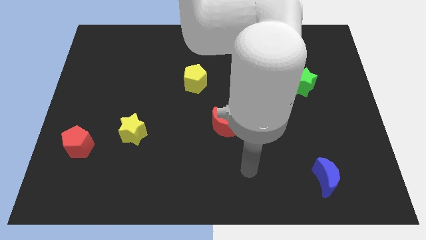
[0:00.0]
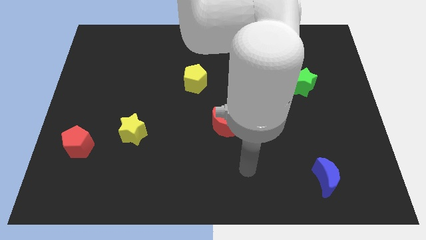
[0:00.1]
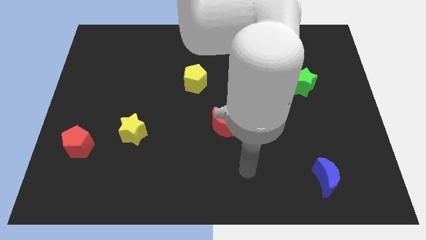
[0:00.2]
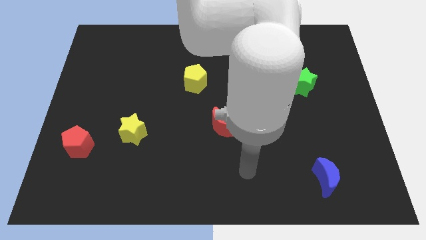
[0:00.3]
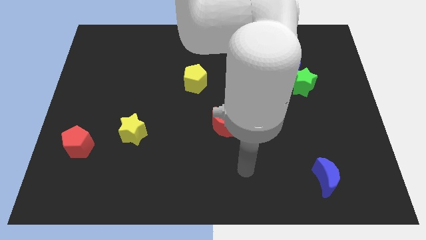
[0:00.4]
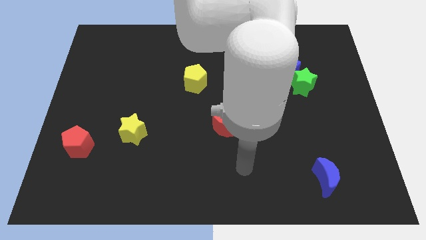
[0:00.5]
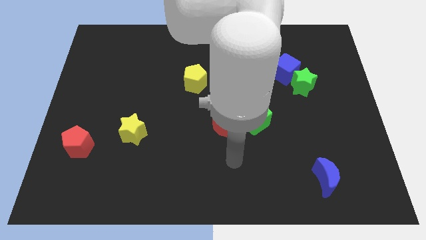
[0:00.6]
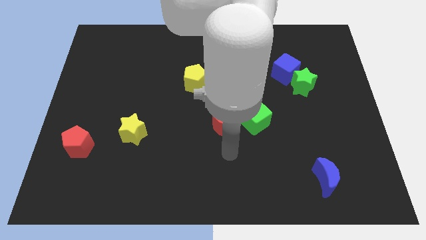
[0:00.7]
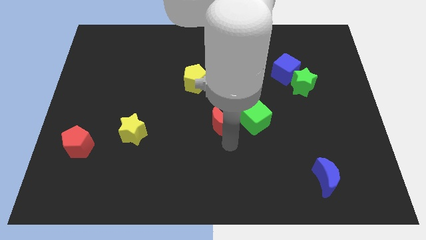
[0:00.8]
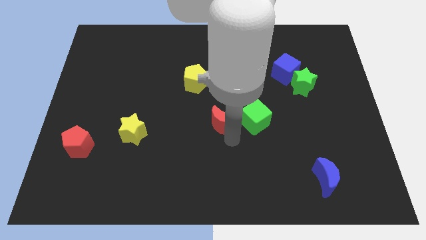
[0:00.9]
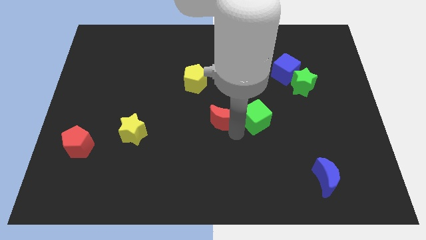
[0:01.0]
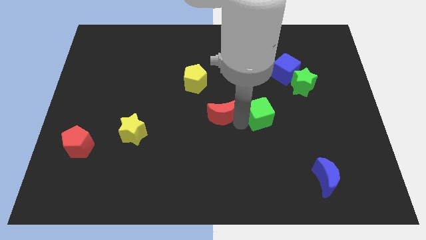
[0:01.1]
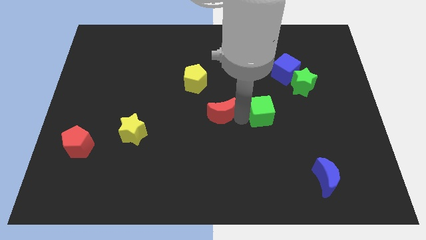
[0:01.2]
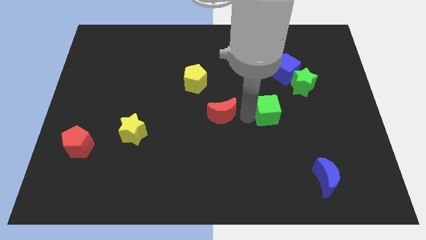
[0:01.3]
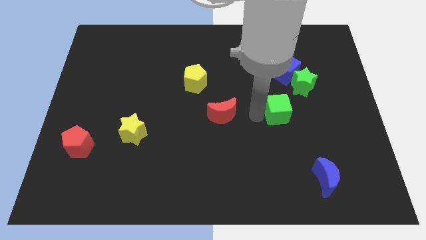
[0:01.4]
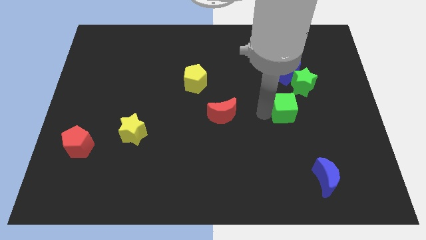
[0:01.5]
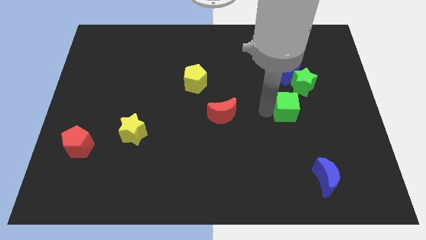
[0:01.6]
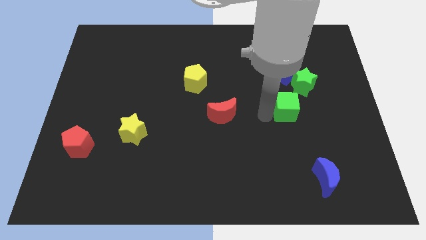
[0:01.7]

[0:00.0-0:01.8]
move the green cube away from the red crescent

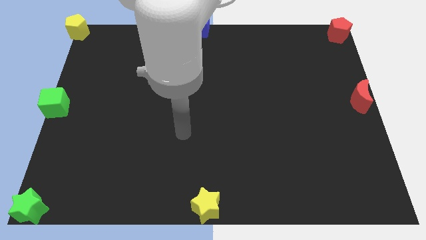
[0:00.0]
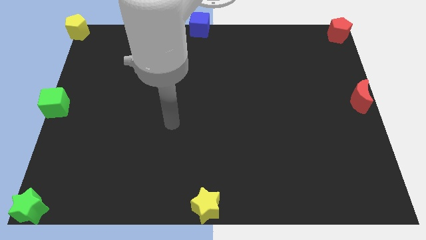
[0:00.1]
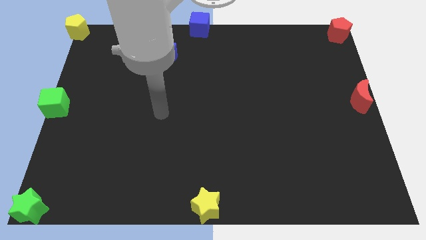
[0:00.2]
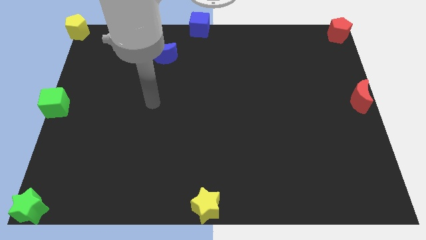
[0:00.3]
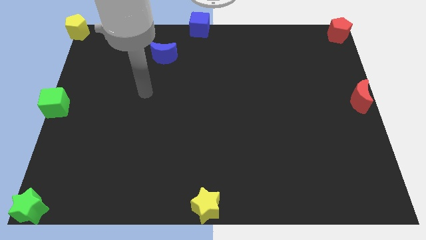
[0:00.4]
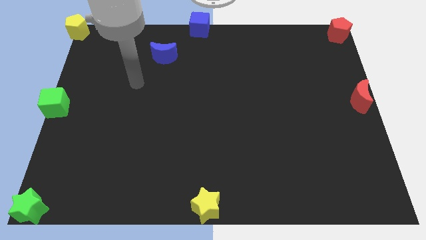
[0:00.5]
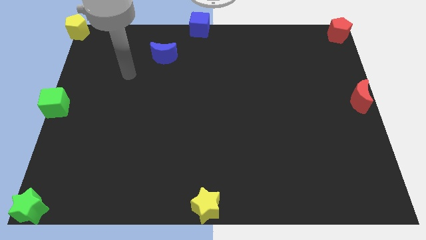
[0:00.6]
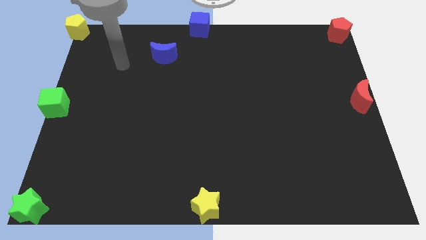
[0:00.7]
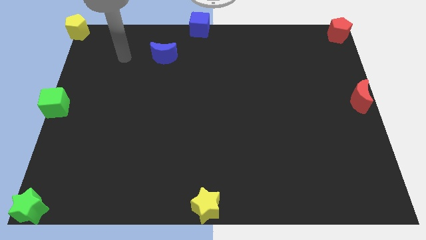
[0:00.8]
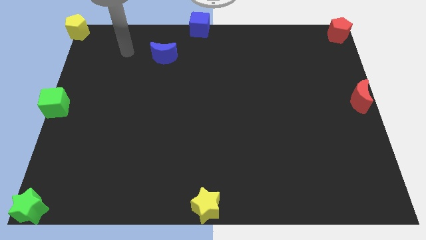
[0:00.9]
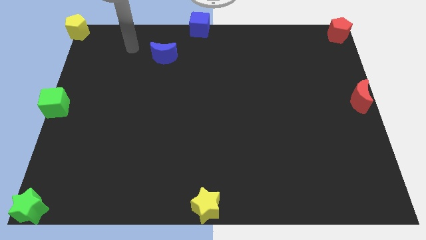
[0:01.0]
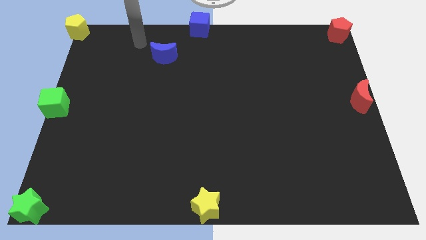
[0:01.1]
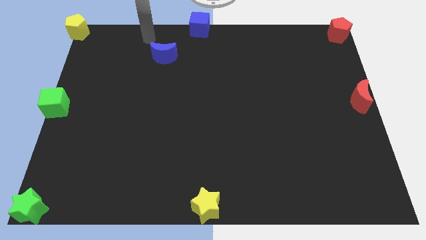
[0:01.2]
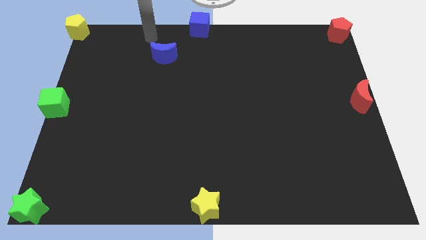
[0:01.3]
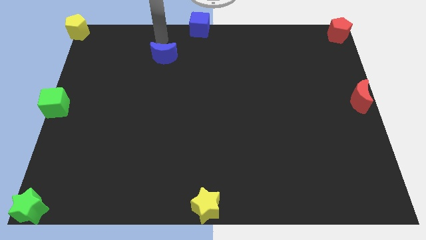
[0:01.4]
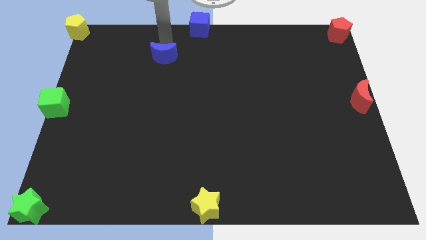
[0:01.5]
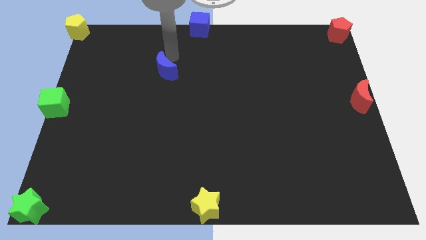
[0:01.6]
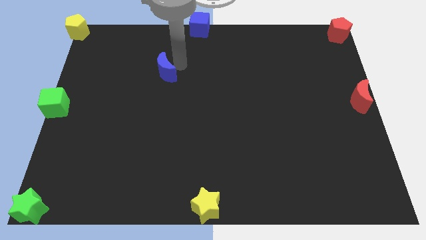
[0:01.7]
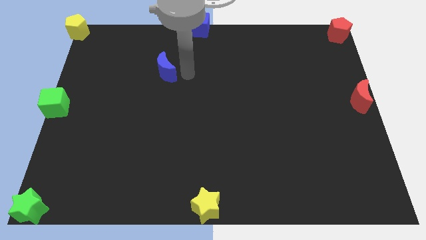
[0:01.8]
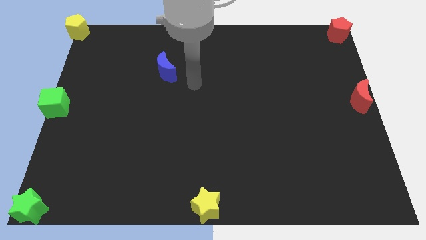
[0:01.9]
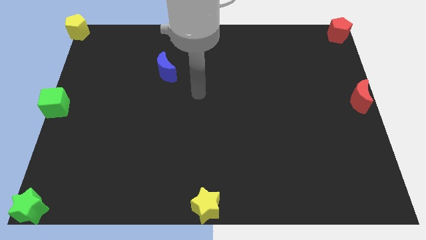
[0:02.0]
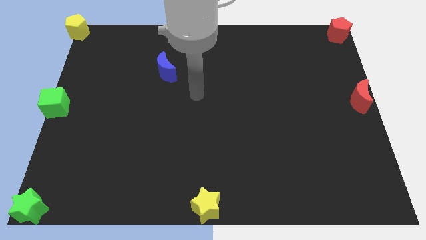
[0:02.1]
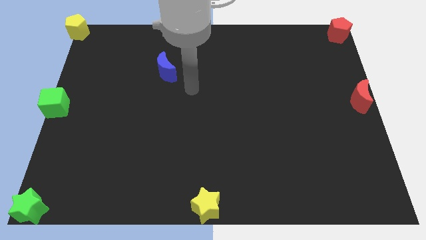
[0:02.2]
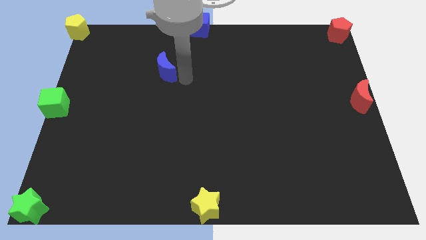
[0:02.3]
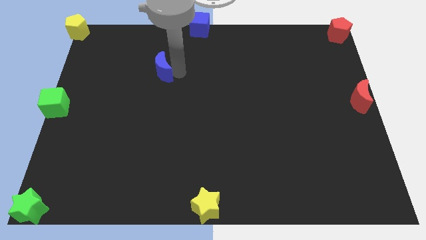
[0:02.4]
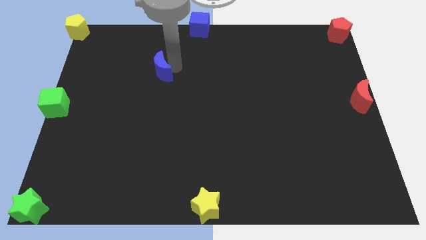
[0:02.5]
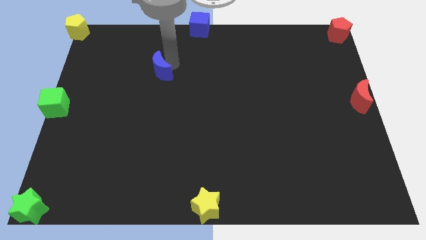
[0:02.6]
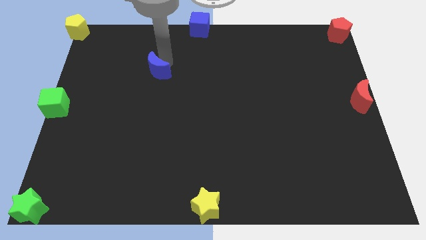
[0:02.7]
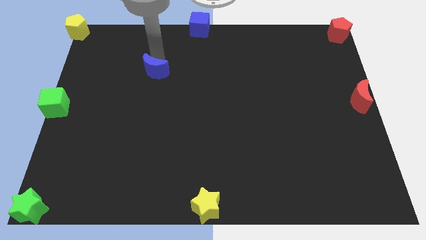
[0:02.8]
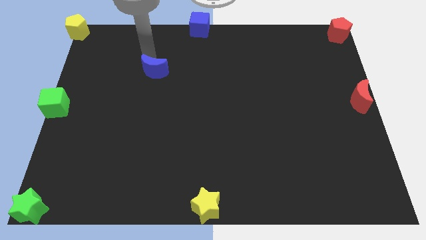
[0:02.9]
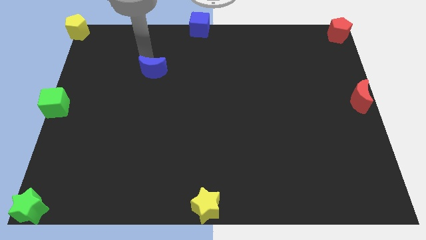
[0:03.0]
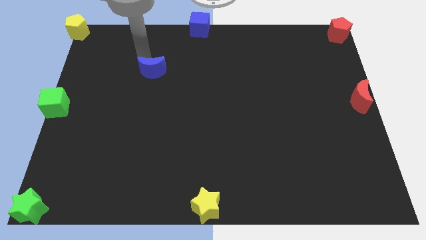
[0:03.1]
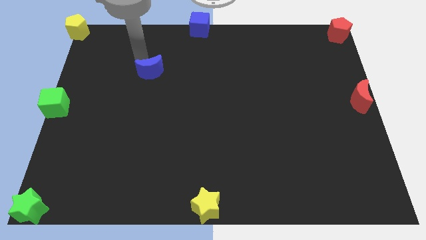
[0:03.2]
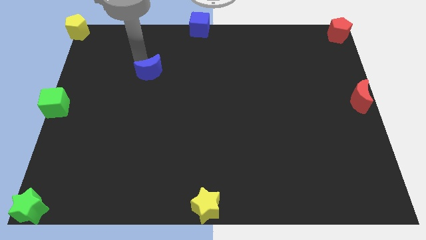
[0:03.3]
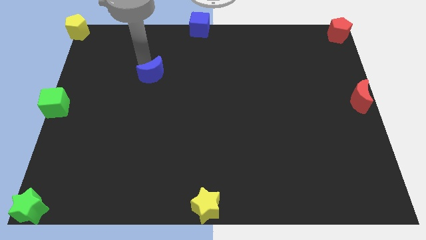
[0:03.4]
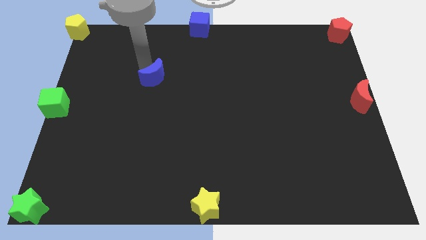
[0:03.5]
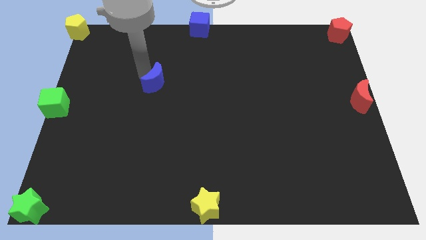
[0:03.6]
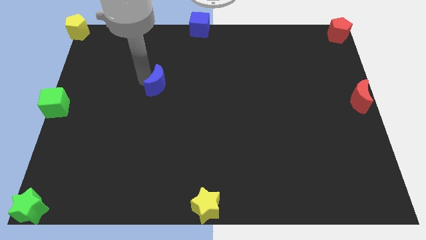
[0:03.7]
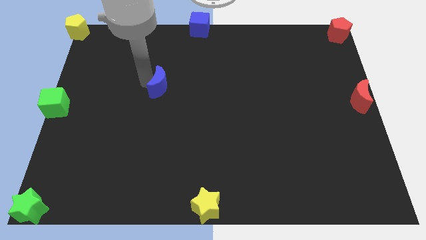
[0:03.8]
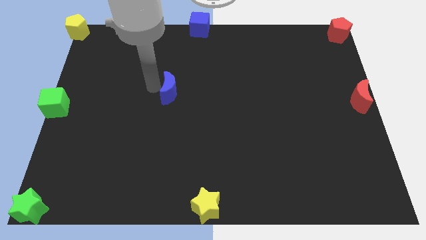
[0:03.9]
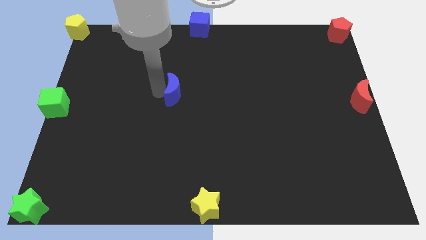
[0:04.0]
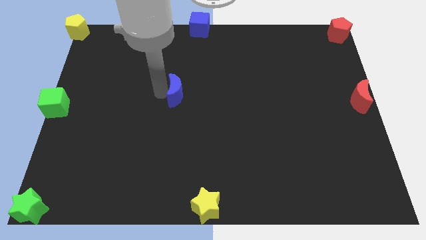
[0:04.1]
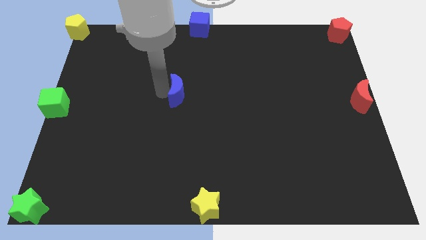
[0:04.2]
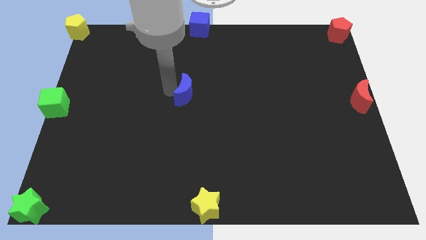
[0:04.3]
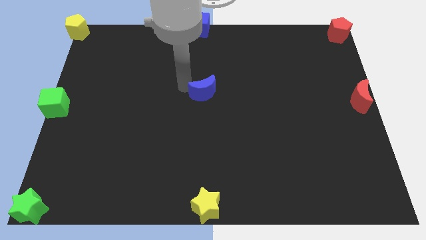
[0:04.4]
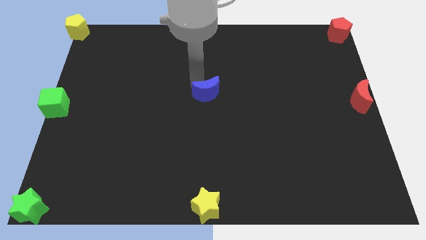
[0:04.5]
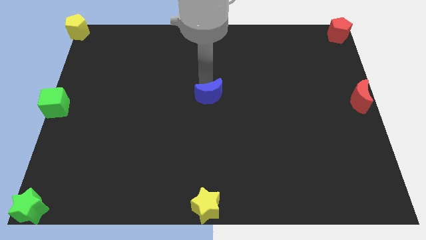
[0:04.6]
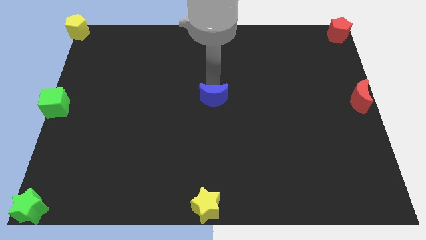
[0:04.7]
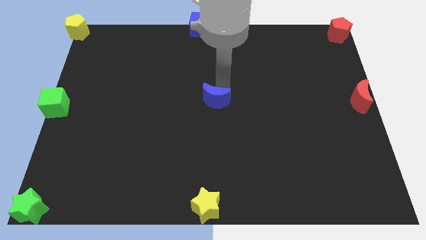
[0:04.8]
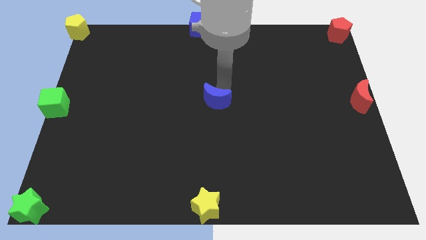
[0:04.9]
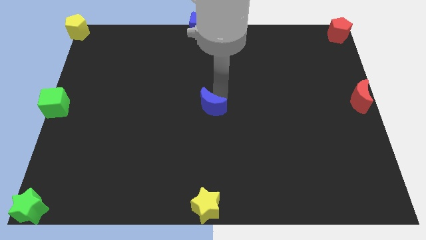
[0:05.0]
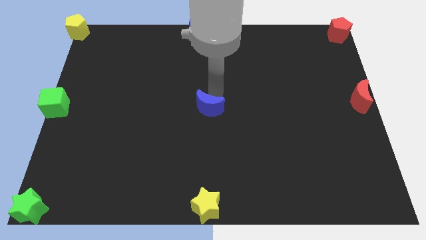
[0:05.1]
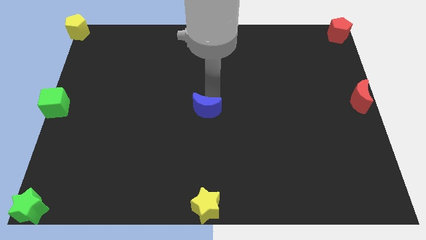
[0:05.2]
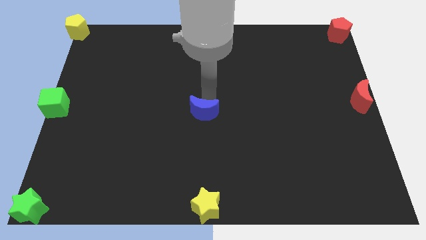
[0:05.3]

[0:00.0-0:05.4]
place the blue crescent at the center of the board

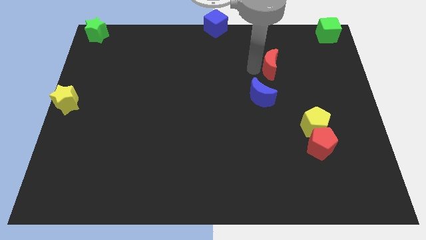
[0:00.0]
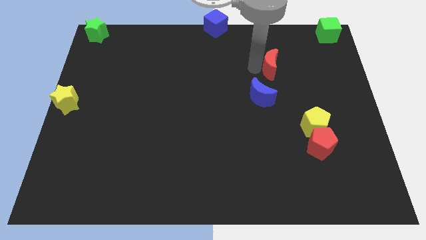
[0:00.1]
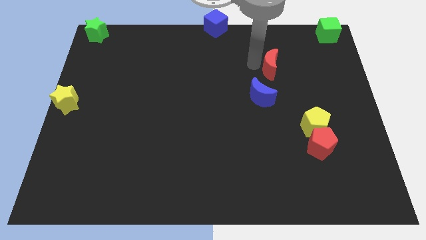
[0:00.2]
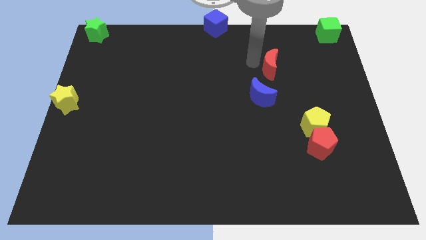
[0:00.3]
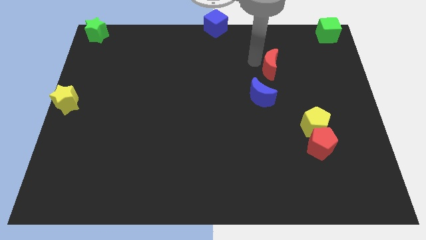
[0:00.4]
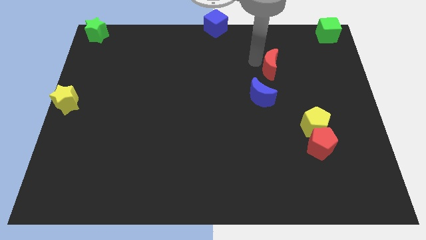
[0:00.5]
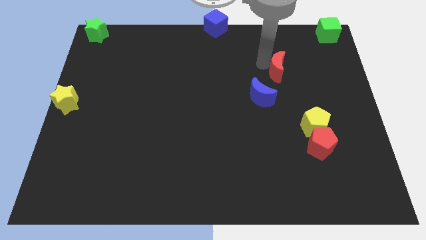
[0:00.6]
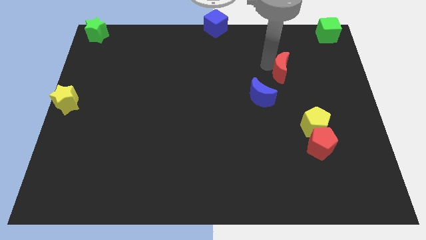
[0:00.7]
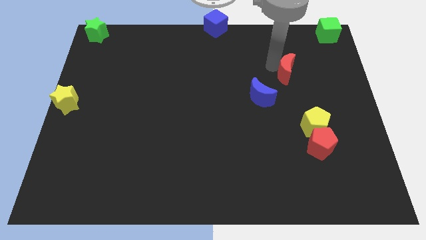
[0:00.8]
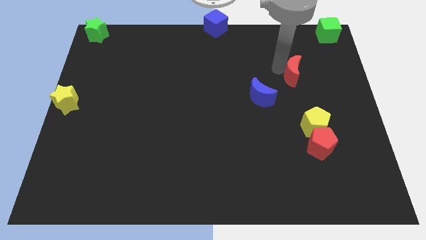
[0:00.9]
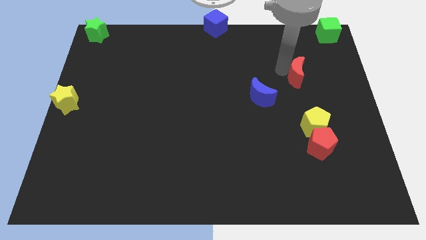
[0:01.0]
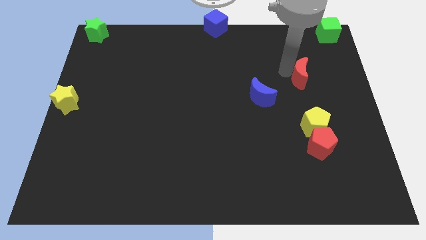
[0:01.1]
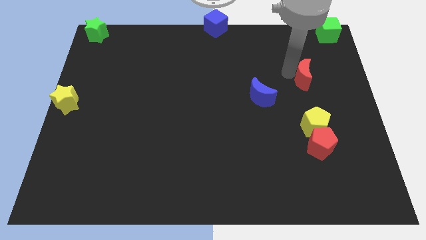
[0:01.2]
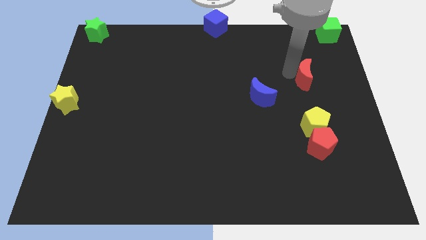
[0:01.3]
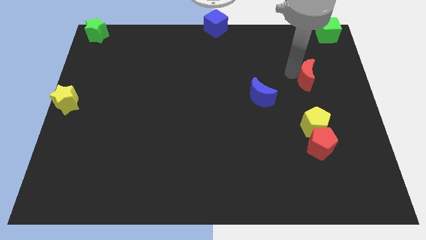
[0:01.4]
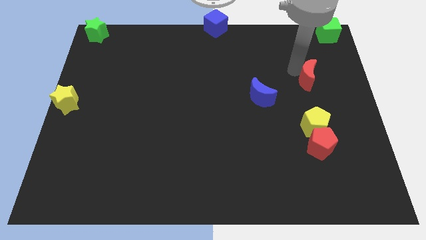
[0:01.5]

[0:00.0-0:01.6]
put the red moon vertically above the yellow pentagon

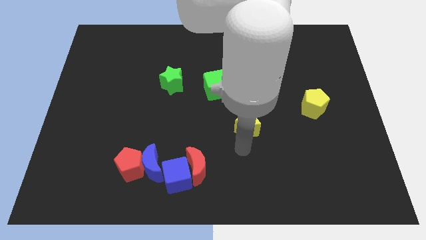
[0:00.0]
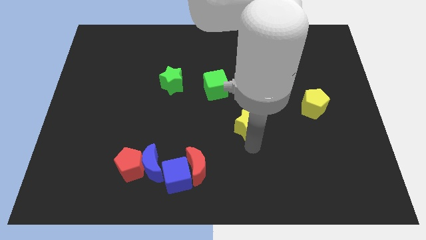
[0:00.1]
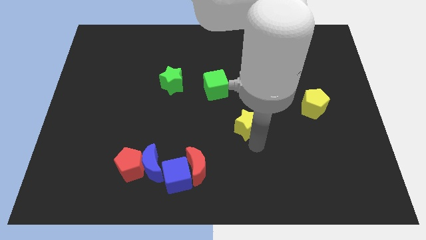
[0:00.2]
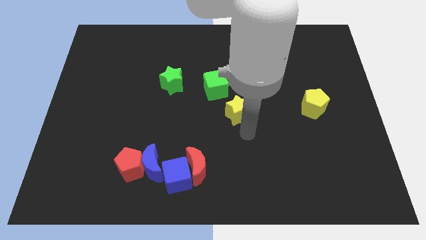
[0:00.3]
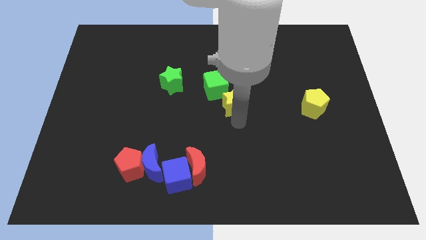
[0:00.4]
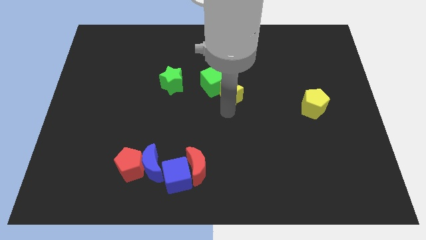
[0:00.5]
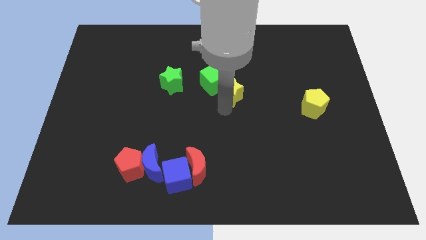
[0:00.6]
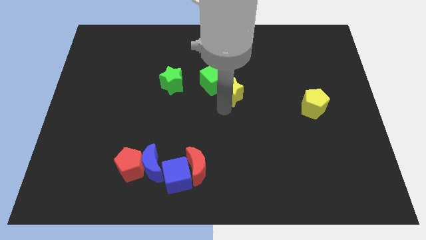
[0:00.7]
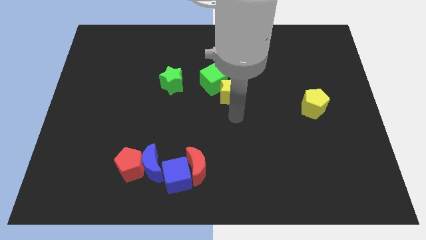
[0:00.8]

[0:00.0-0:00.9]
push yellow start towards green star
